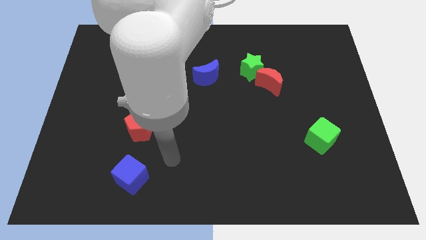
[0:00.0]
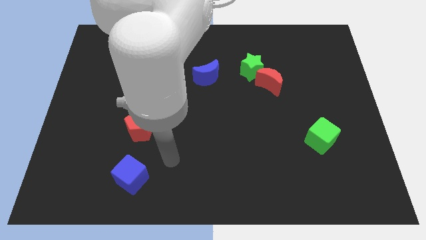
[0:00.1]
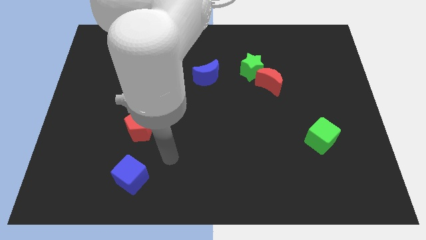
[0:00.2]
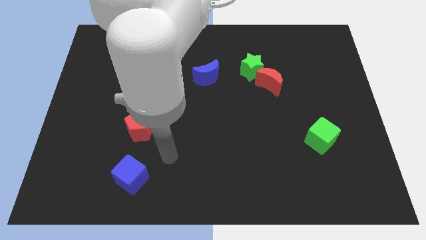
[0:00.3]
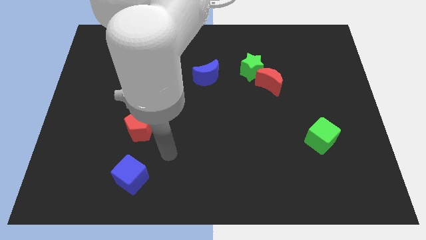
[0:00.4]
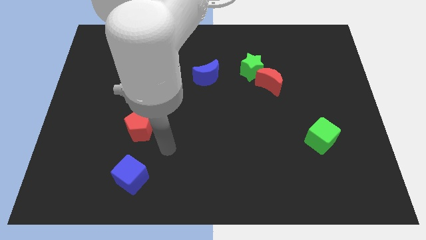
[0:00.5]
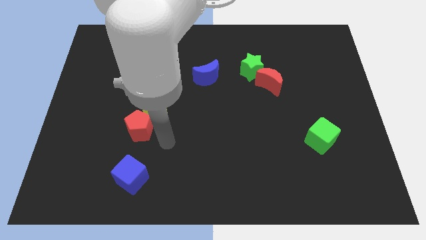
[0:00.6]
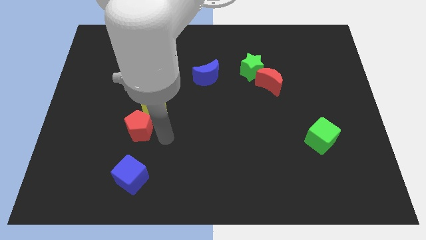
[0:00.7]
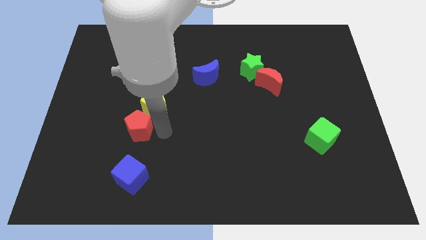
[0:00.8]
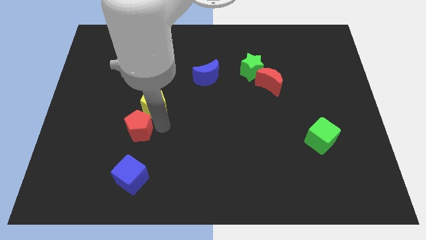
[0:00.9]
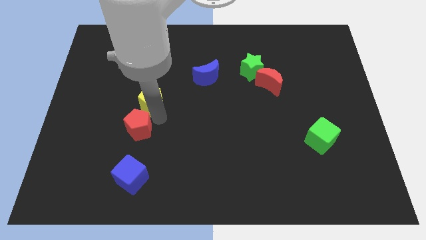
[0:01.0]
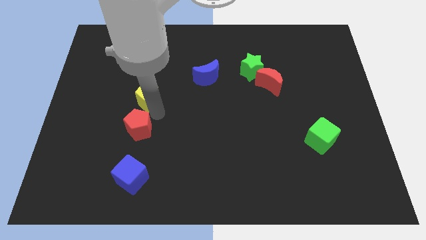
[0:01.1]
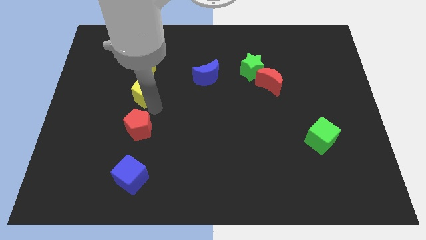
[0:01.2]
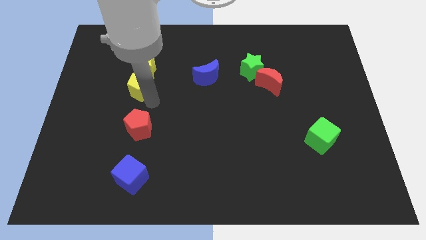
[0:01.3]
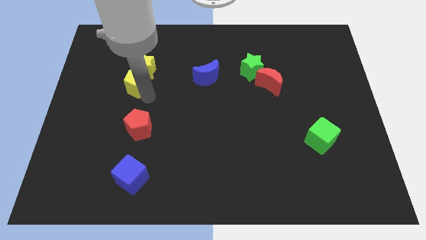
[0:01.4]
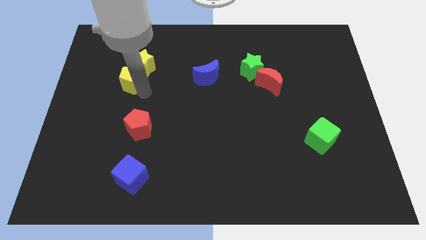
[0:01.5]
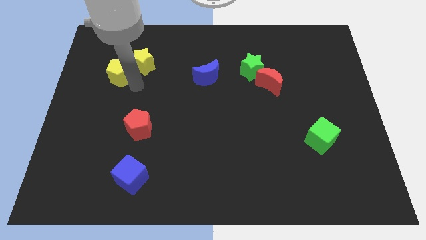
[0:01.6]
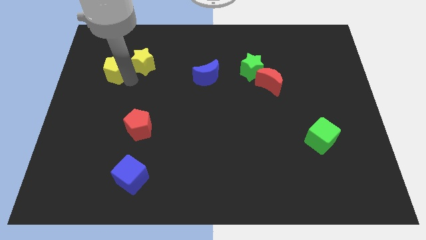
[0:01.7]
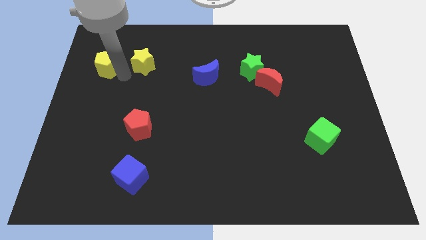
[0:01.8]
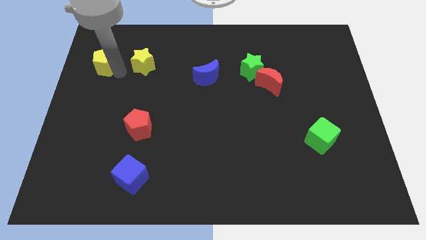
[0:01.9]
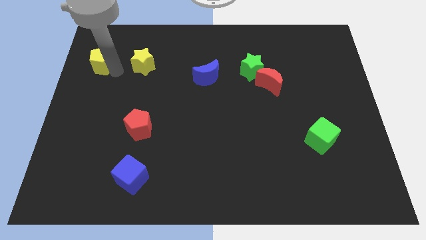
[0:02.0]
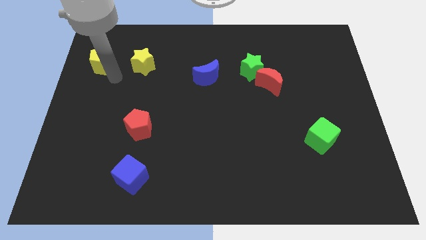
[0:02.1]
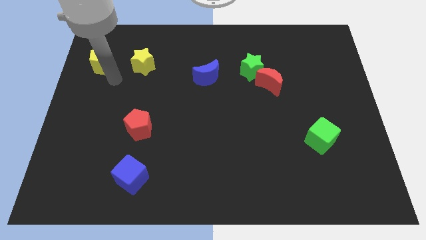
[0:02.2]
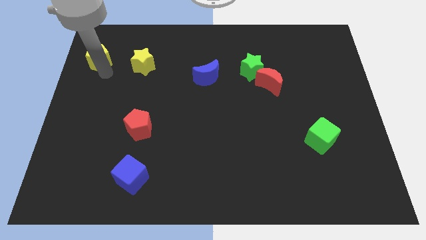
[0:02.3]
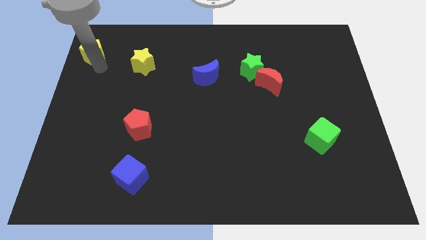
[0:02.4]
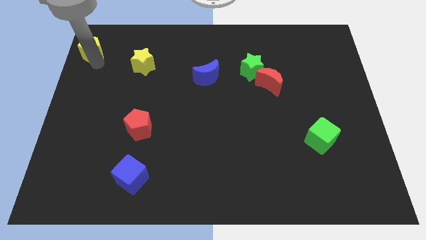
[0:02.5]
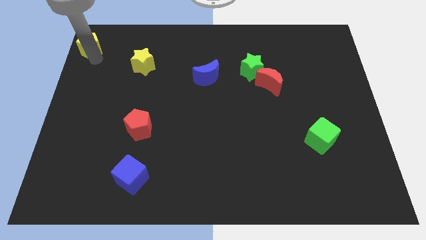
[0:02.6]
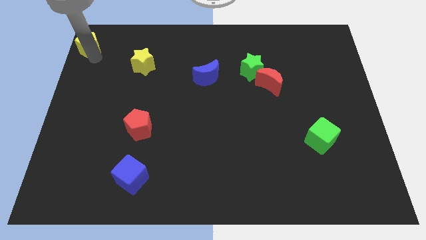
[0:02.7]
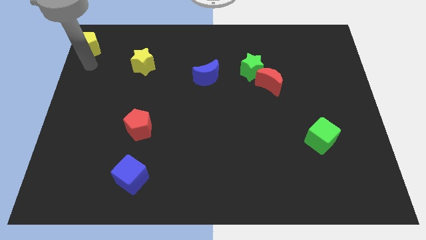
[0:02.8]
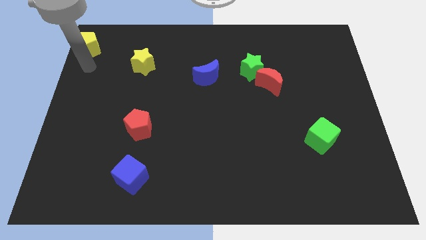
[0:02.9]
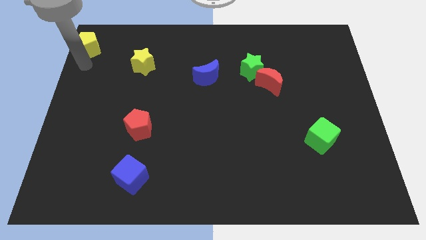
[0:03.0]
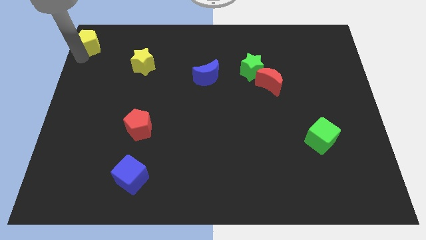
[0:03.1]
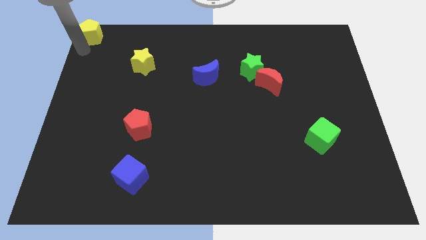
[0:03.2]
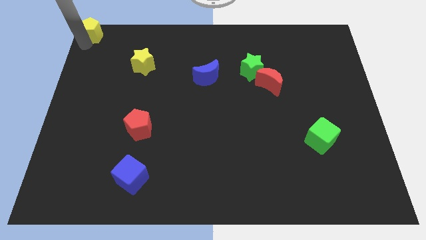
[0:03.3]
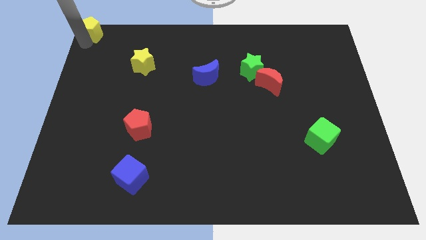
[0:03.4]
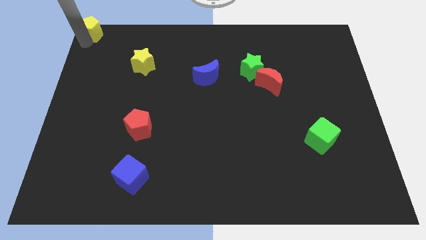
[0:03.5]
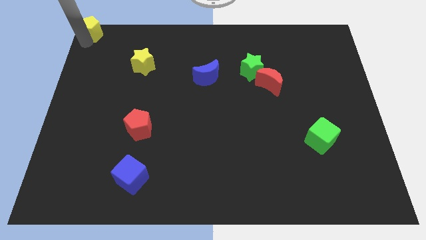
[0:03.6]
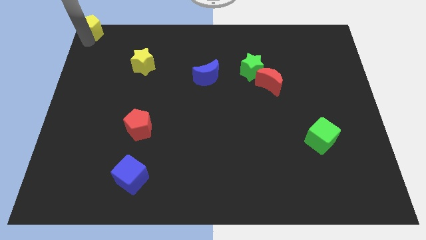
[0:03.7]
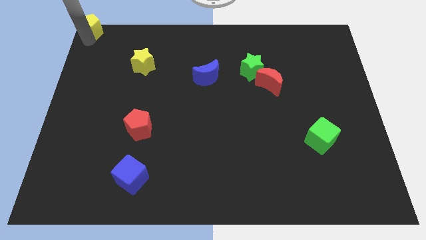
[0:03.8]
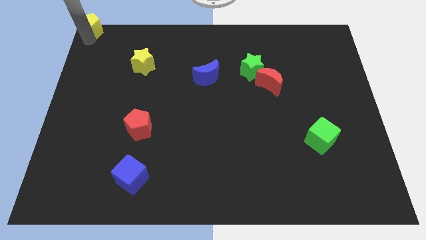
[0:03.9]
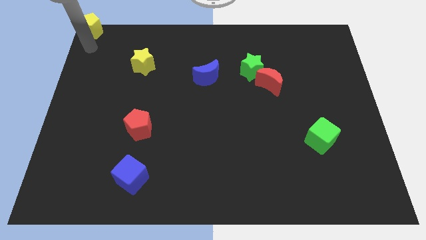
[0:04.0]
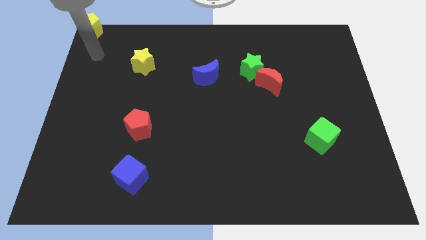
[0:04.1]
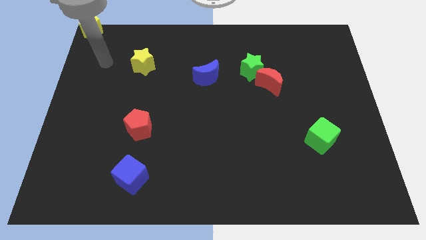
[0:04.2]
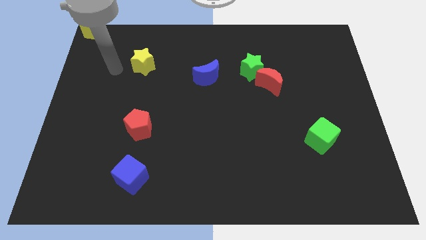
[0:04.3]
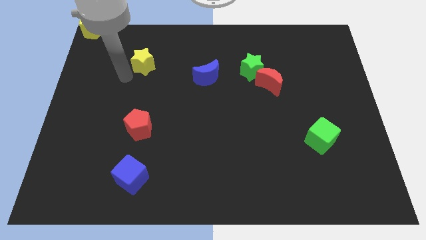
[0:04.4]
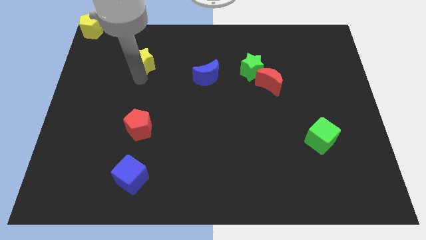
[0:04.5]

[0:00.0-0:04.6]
push yellow pentagon at the top left corner of teh board

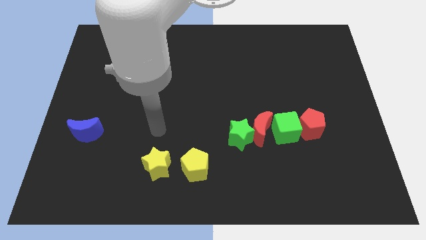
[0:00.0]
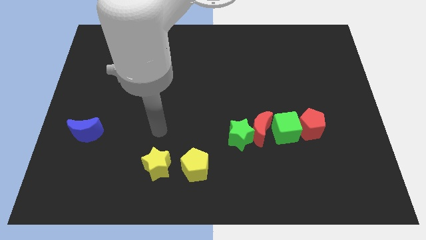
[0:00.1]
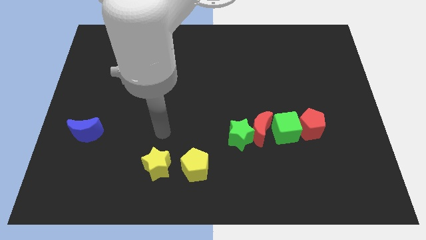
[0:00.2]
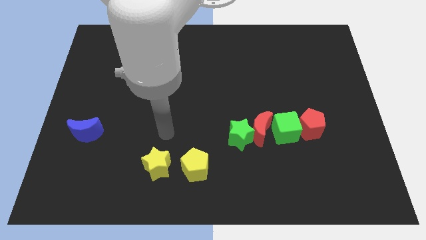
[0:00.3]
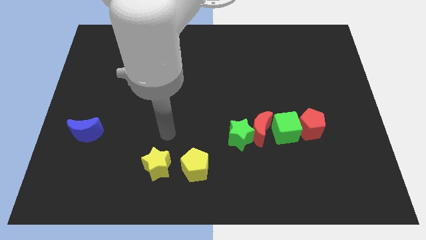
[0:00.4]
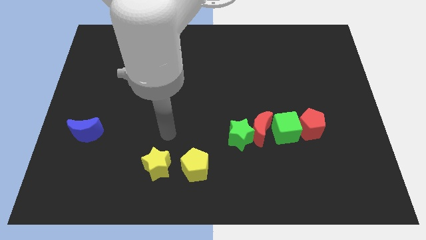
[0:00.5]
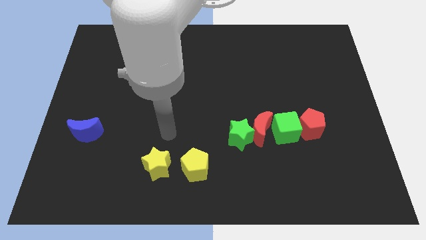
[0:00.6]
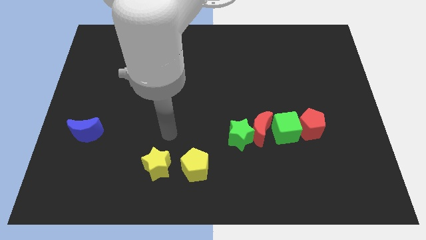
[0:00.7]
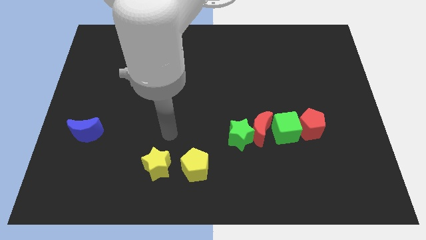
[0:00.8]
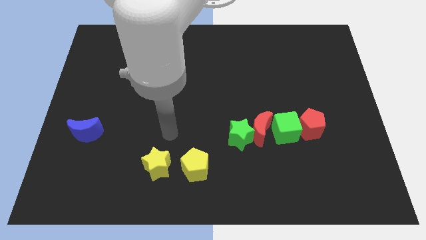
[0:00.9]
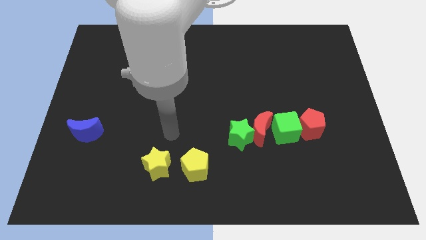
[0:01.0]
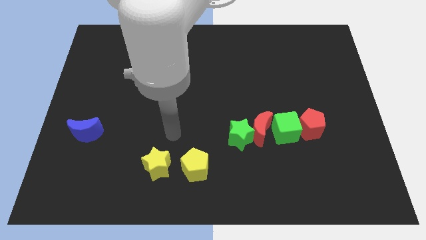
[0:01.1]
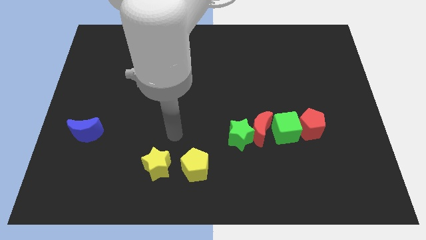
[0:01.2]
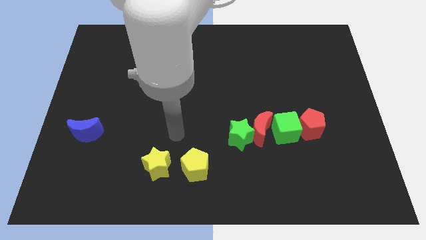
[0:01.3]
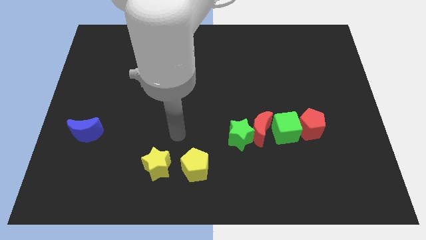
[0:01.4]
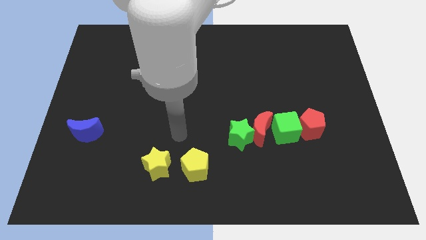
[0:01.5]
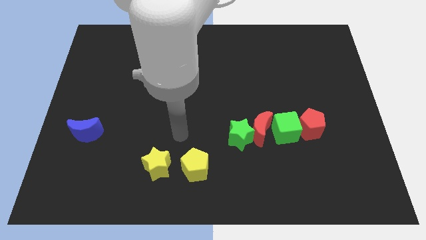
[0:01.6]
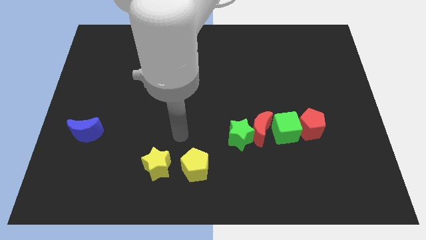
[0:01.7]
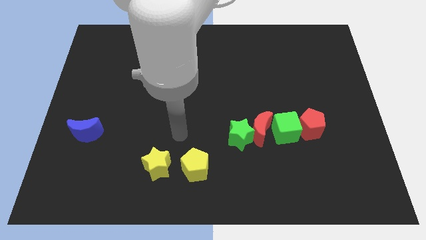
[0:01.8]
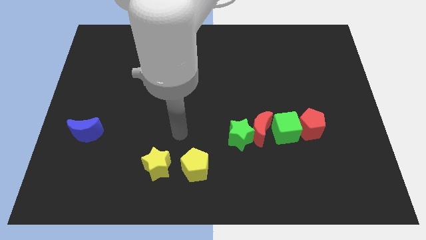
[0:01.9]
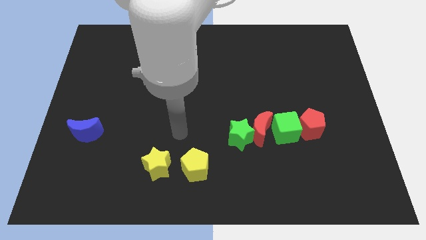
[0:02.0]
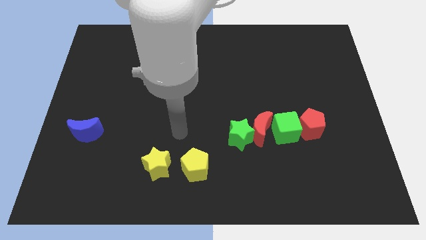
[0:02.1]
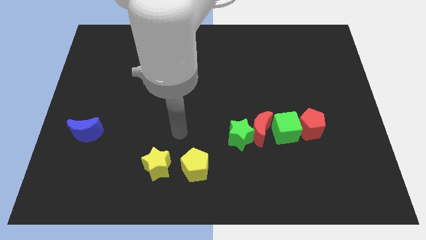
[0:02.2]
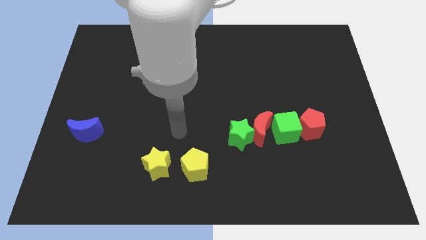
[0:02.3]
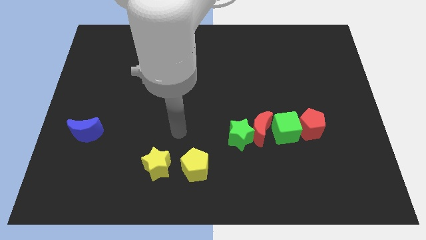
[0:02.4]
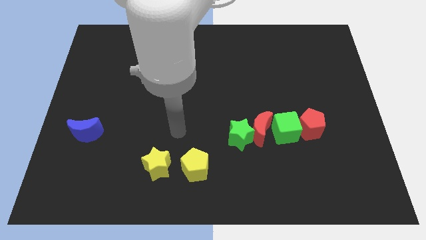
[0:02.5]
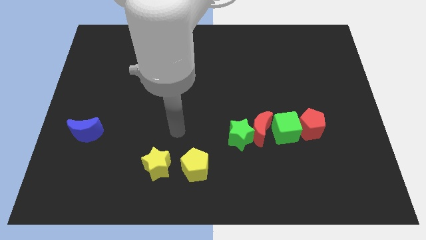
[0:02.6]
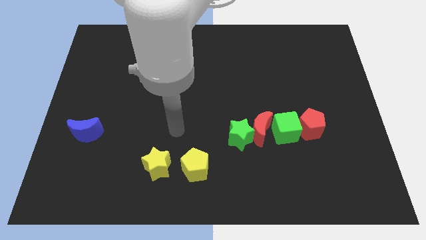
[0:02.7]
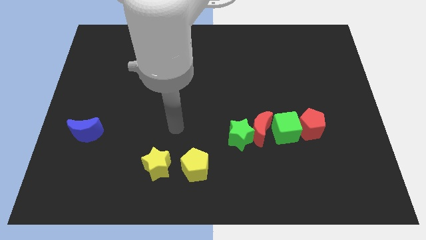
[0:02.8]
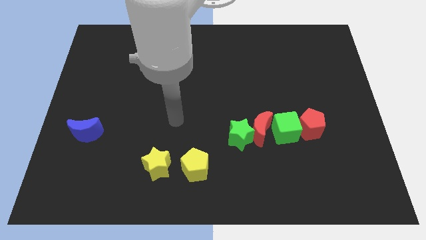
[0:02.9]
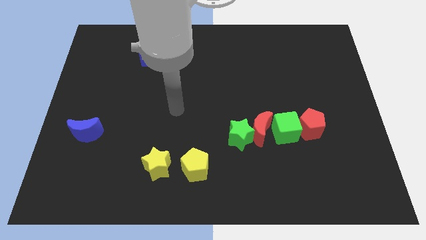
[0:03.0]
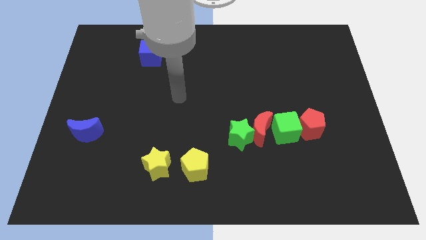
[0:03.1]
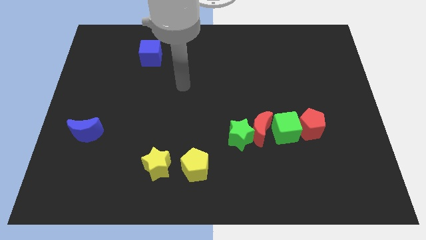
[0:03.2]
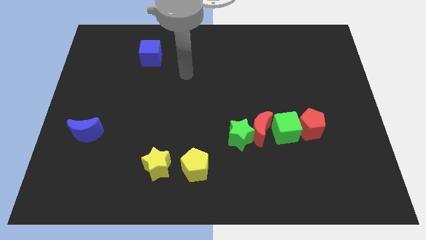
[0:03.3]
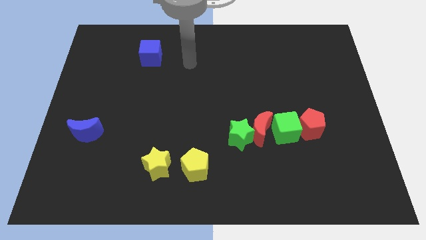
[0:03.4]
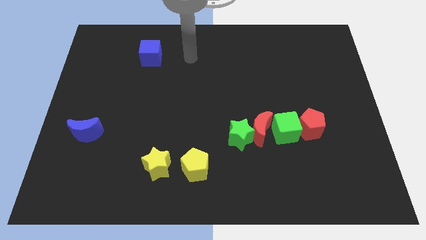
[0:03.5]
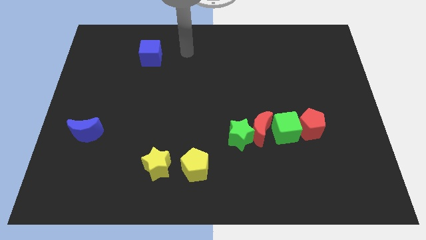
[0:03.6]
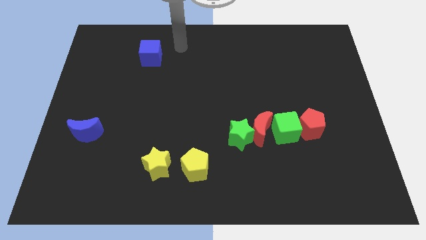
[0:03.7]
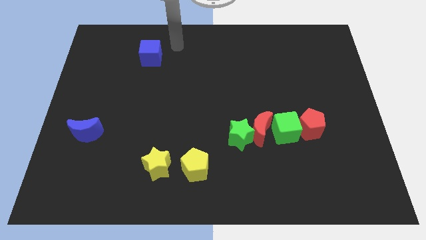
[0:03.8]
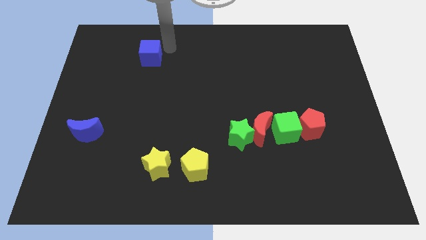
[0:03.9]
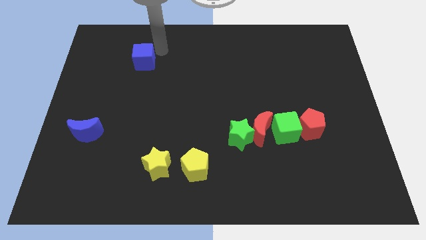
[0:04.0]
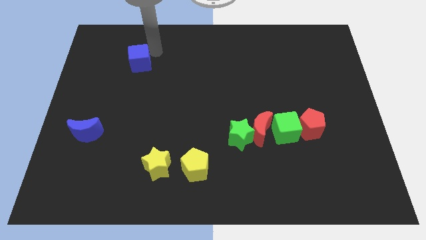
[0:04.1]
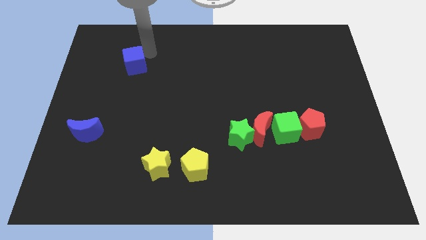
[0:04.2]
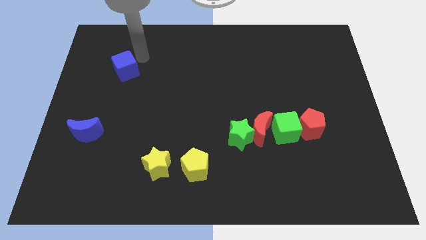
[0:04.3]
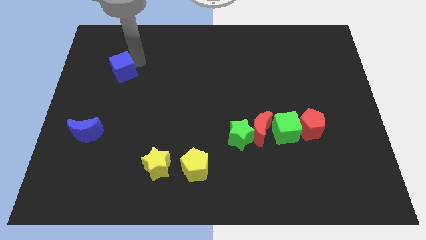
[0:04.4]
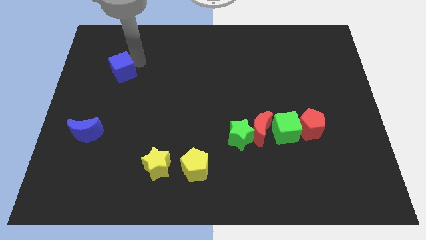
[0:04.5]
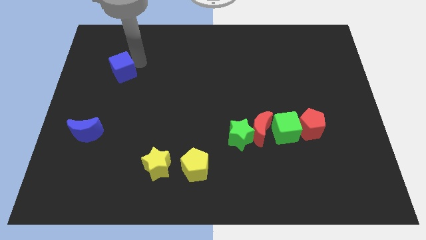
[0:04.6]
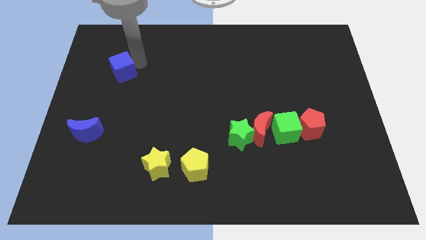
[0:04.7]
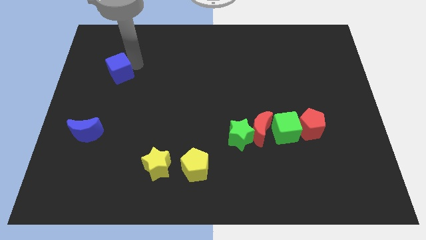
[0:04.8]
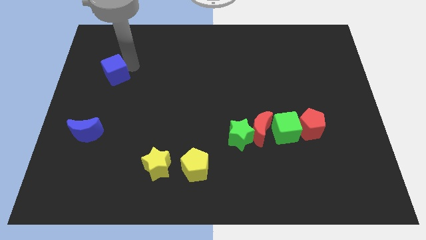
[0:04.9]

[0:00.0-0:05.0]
place your arm into the blue cube
